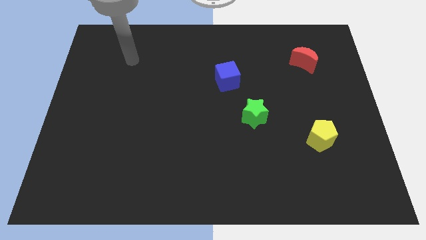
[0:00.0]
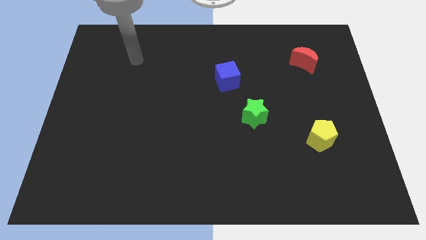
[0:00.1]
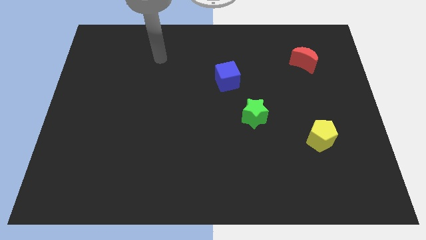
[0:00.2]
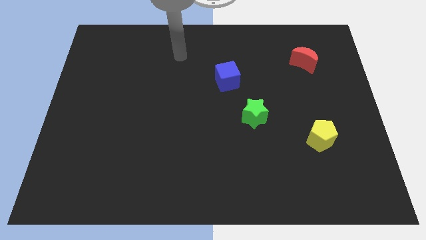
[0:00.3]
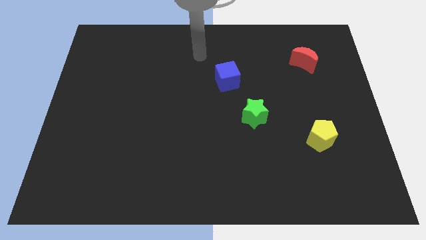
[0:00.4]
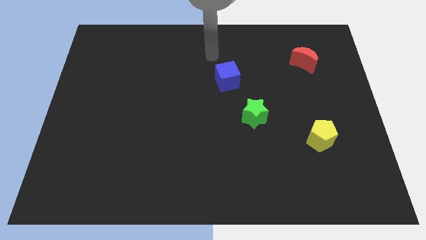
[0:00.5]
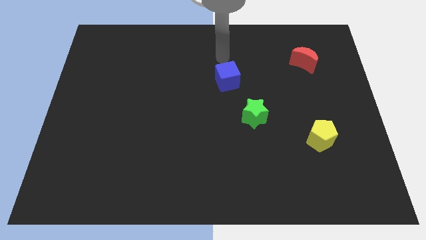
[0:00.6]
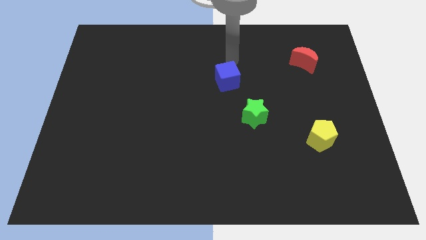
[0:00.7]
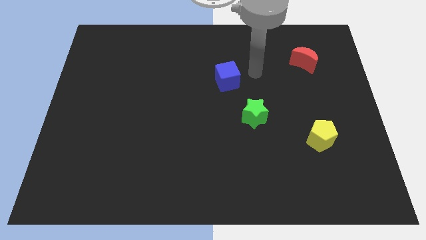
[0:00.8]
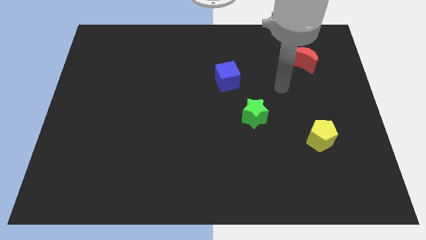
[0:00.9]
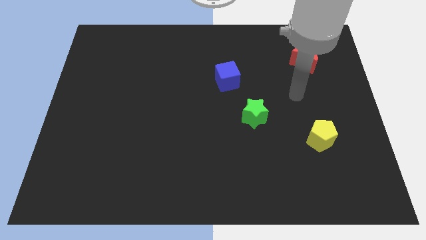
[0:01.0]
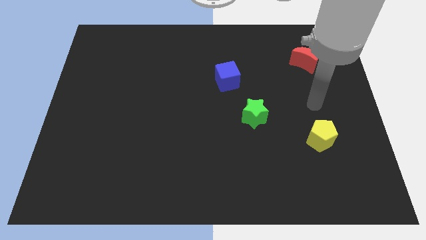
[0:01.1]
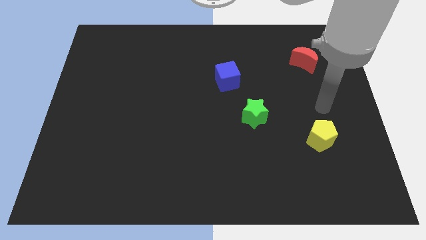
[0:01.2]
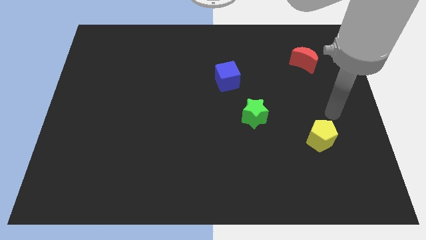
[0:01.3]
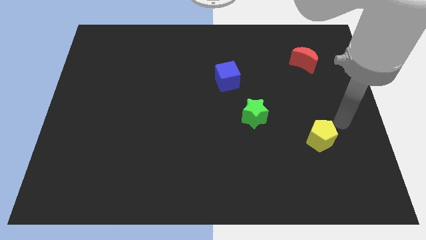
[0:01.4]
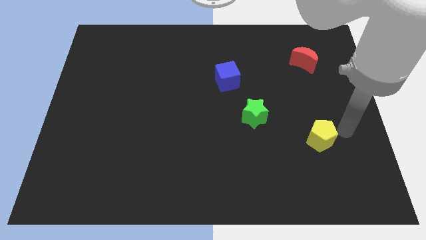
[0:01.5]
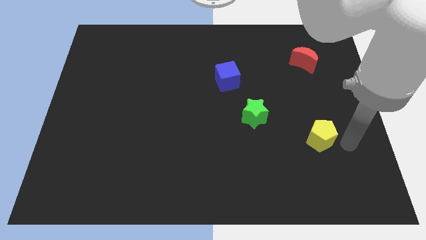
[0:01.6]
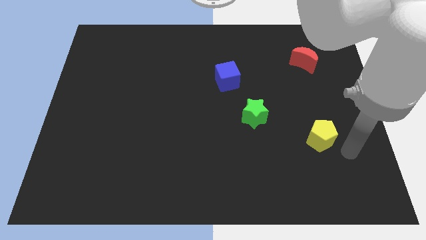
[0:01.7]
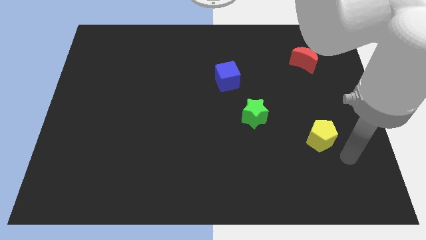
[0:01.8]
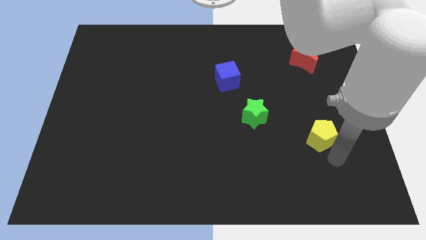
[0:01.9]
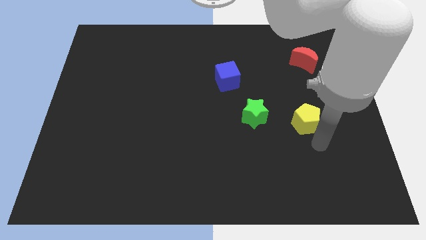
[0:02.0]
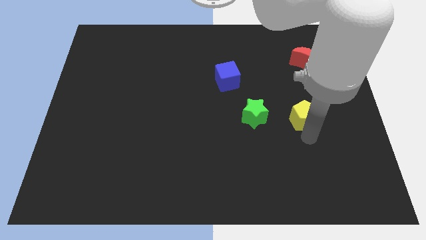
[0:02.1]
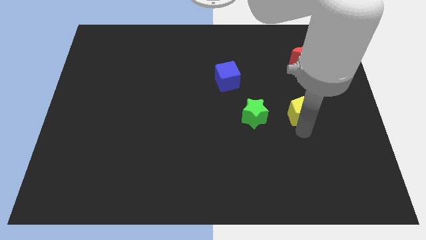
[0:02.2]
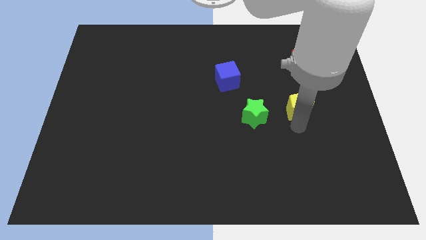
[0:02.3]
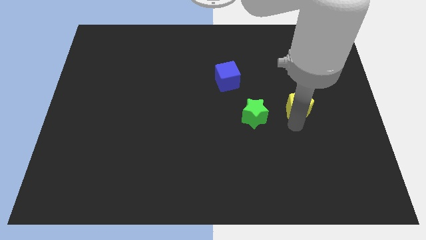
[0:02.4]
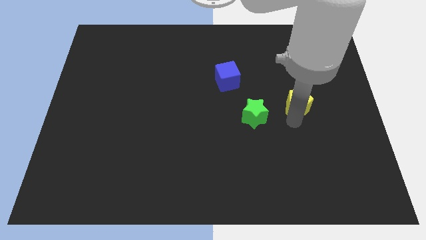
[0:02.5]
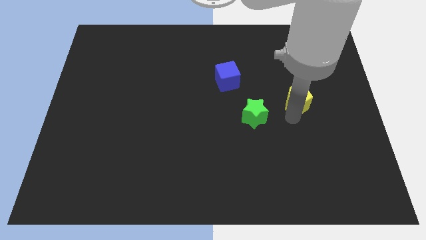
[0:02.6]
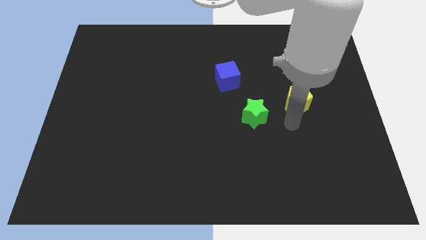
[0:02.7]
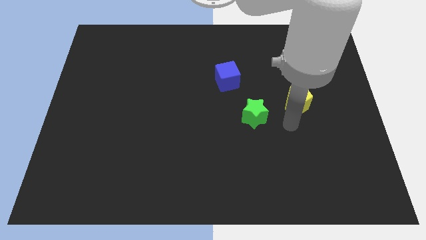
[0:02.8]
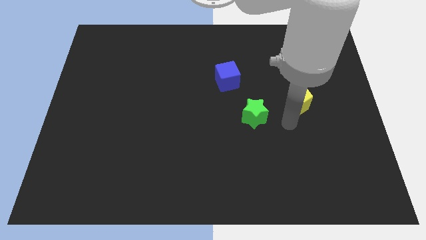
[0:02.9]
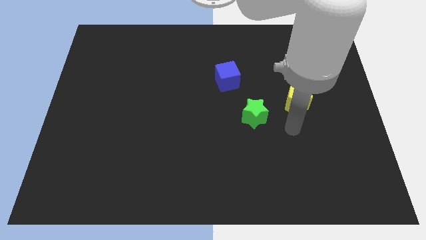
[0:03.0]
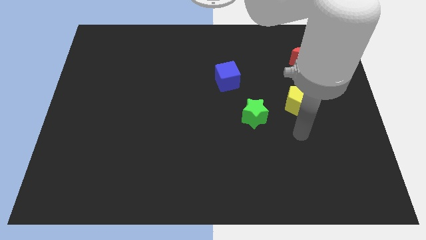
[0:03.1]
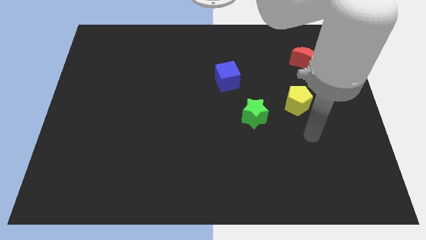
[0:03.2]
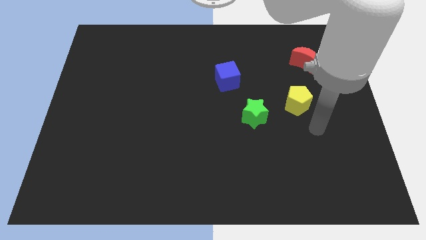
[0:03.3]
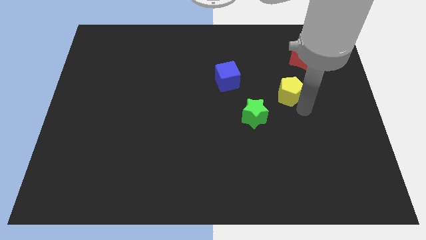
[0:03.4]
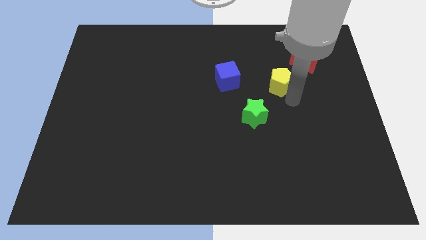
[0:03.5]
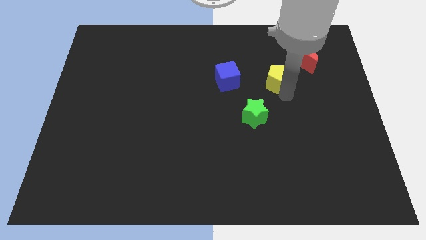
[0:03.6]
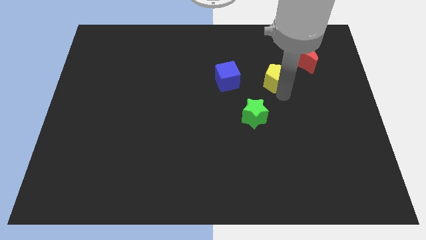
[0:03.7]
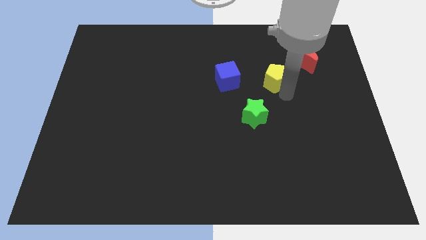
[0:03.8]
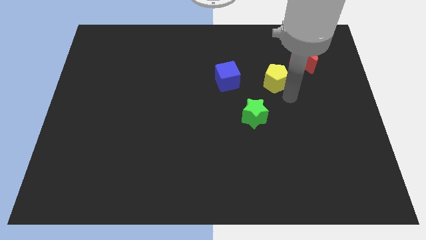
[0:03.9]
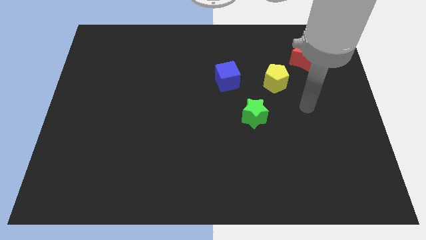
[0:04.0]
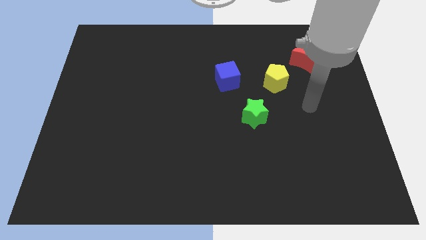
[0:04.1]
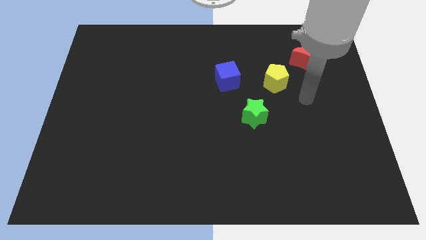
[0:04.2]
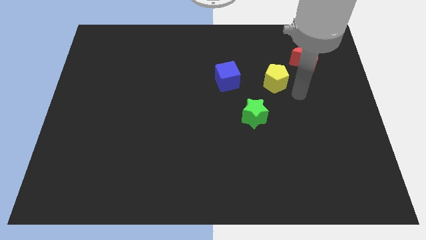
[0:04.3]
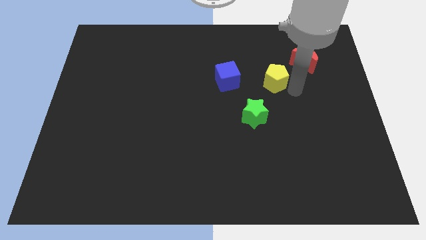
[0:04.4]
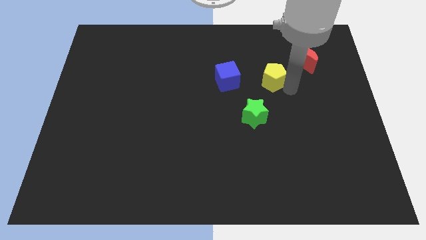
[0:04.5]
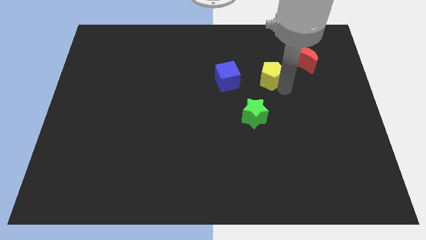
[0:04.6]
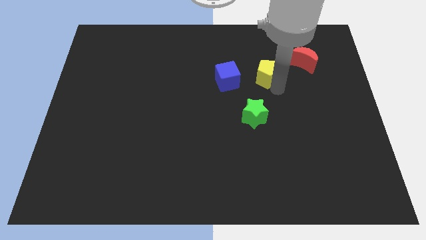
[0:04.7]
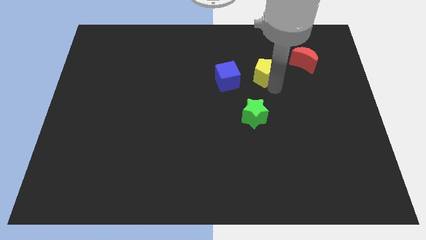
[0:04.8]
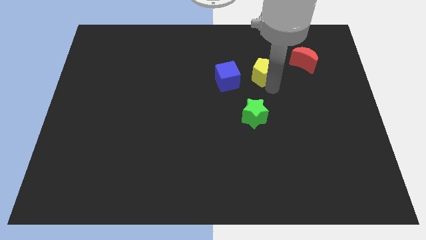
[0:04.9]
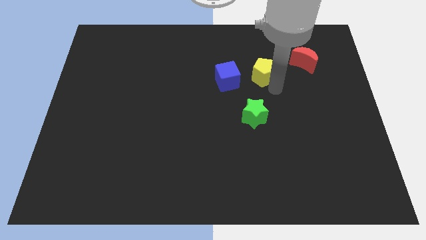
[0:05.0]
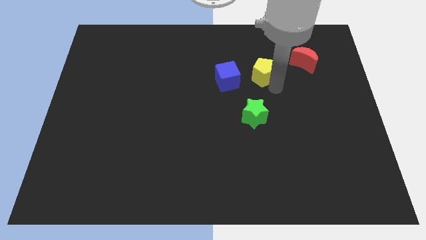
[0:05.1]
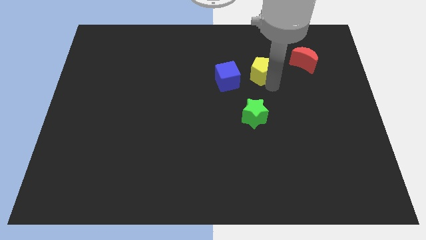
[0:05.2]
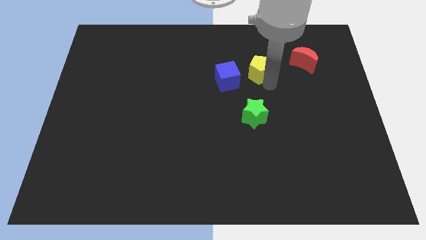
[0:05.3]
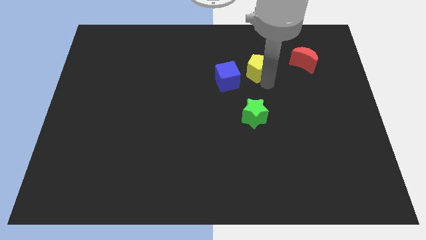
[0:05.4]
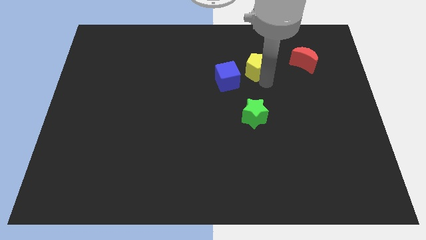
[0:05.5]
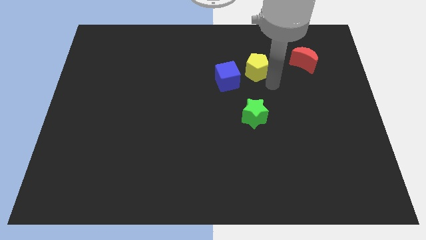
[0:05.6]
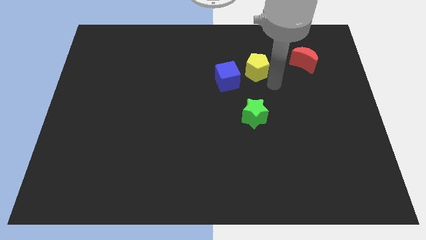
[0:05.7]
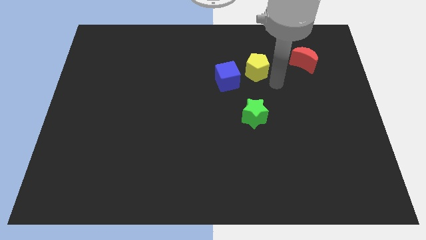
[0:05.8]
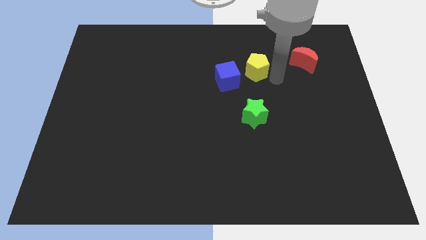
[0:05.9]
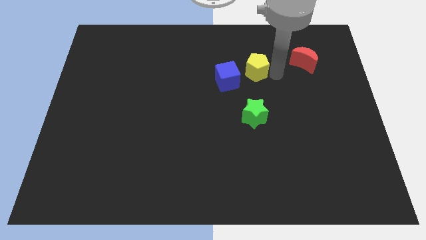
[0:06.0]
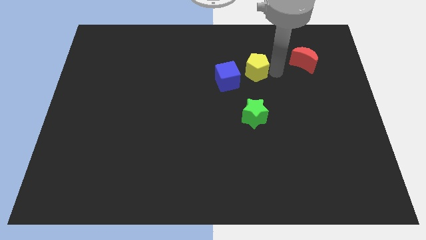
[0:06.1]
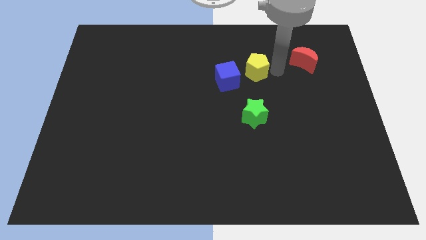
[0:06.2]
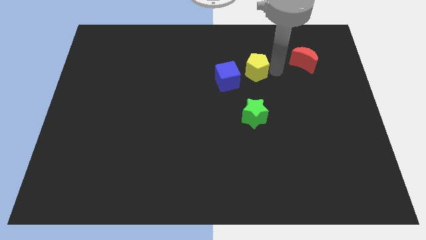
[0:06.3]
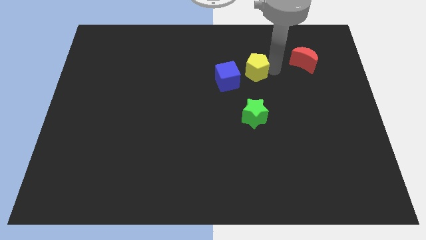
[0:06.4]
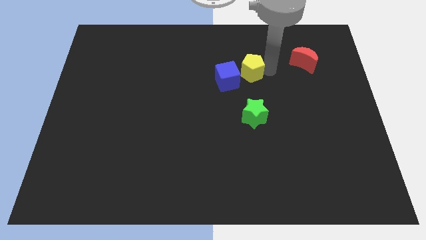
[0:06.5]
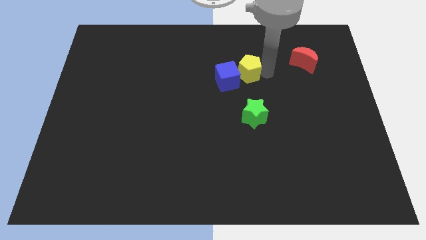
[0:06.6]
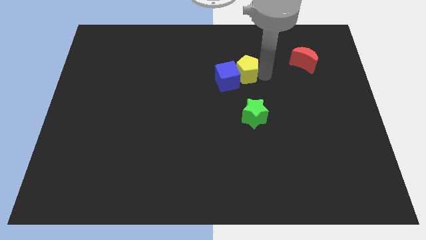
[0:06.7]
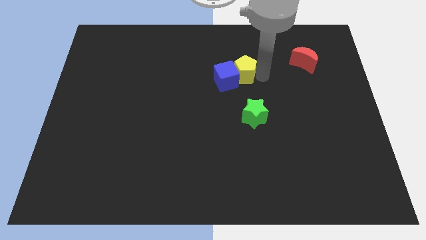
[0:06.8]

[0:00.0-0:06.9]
slide the pentagon towards the blue block

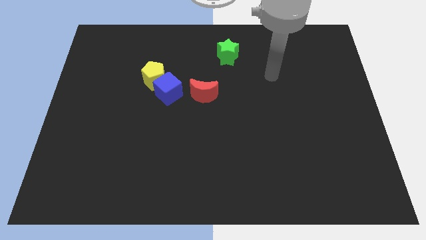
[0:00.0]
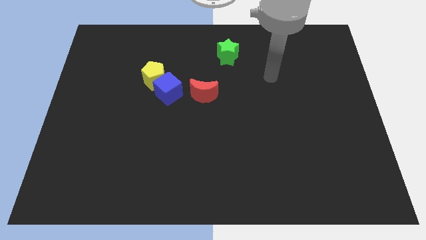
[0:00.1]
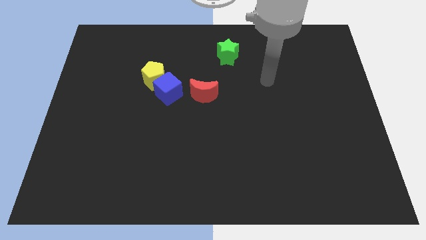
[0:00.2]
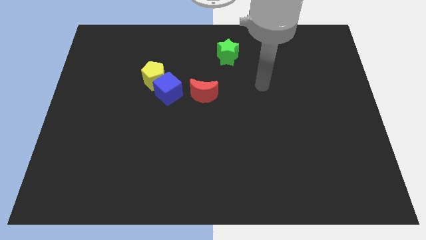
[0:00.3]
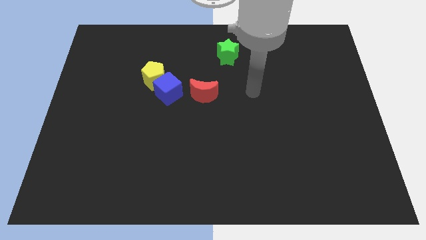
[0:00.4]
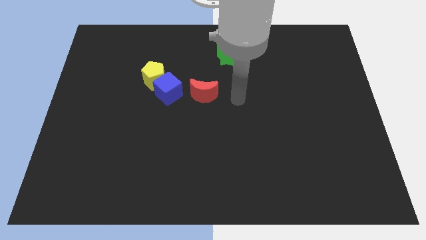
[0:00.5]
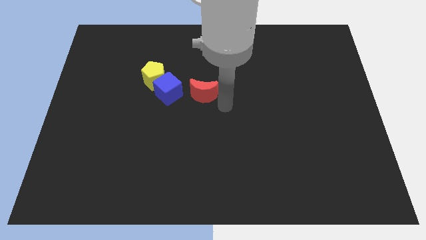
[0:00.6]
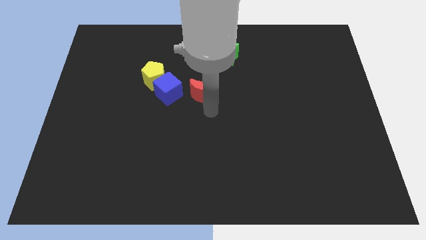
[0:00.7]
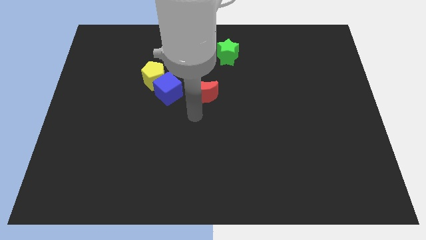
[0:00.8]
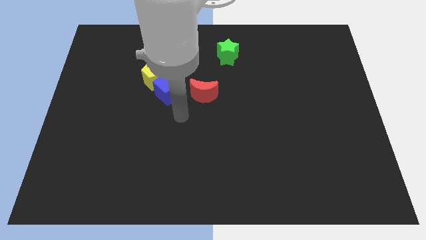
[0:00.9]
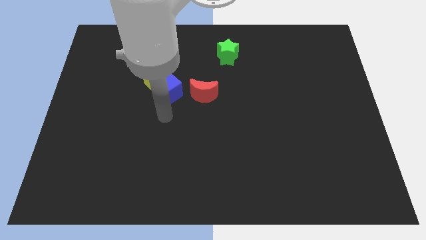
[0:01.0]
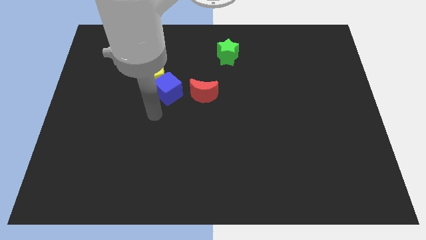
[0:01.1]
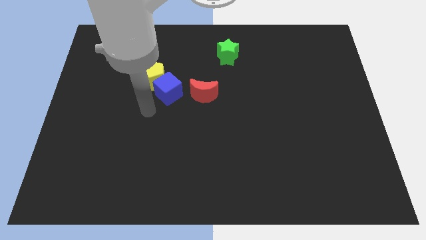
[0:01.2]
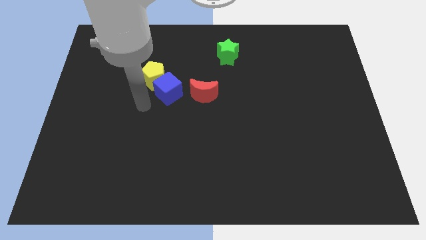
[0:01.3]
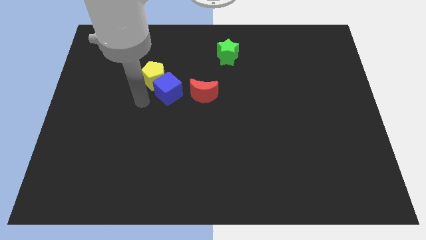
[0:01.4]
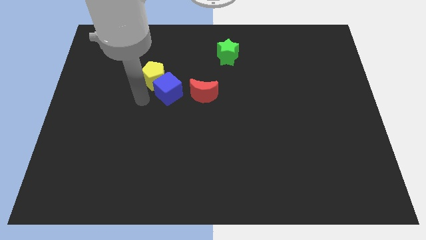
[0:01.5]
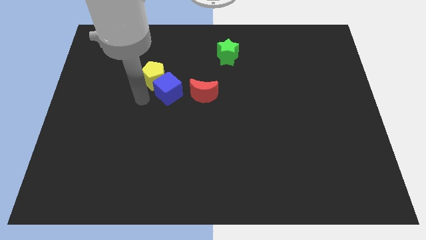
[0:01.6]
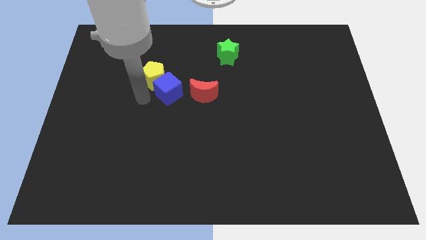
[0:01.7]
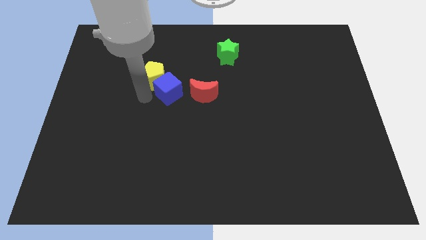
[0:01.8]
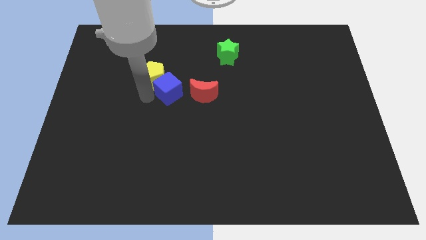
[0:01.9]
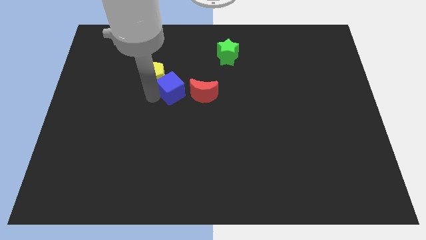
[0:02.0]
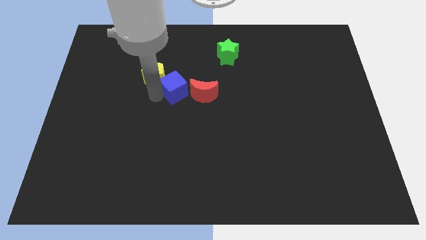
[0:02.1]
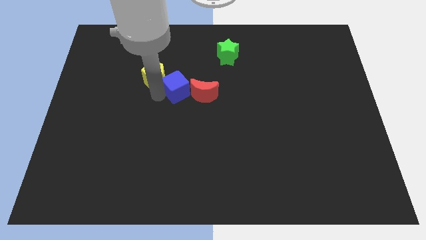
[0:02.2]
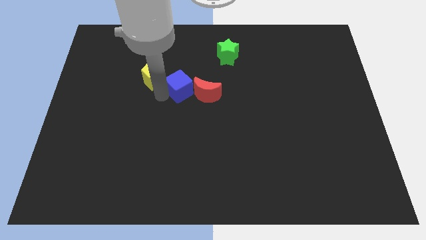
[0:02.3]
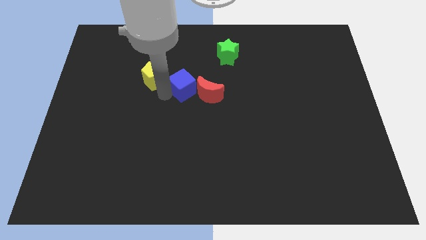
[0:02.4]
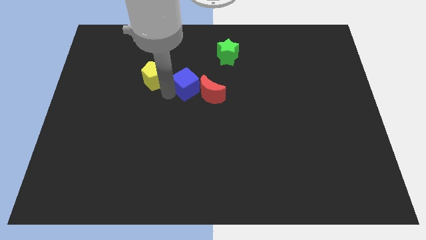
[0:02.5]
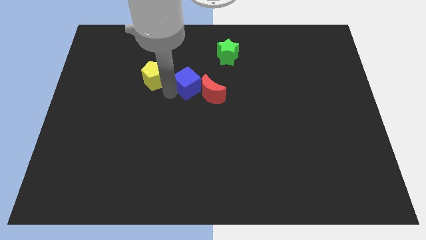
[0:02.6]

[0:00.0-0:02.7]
move the cube to the red moon
